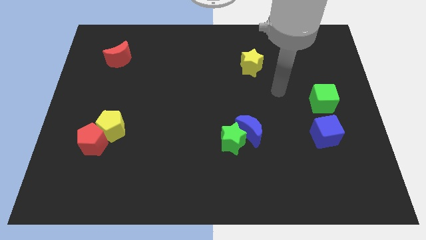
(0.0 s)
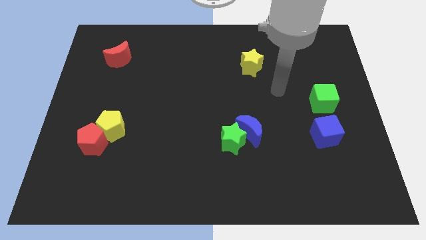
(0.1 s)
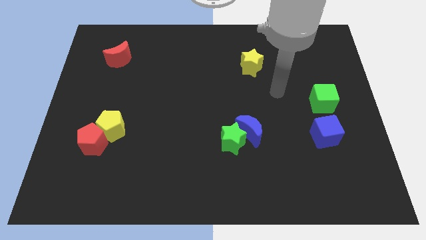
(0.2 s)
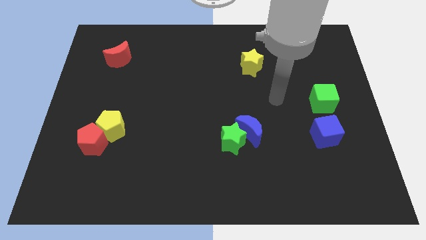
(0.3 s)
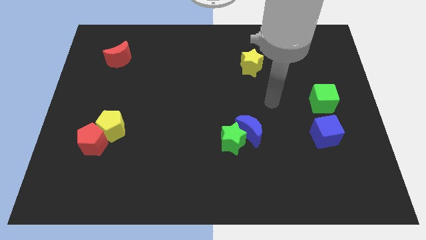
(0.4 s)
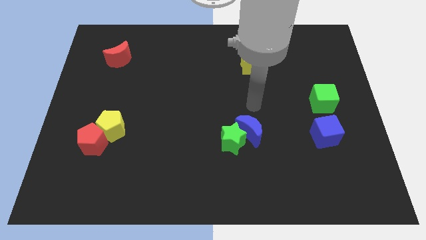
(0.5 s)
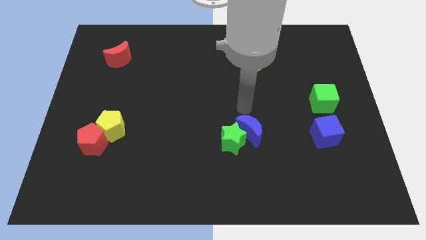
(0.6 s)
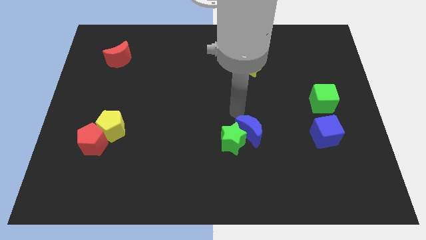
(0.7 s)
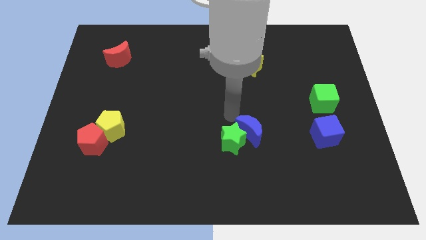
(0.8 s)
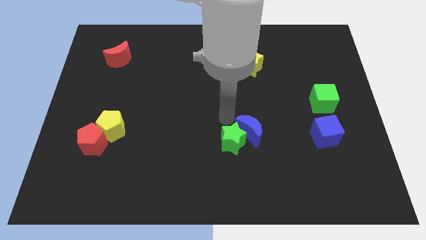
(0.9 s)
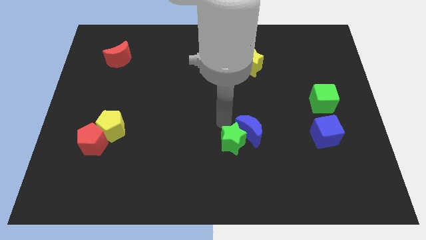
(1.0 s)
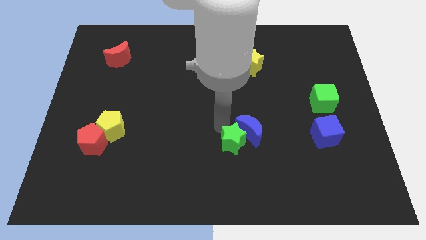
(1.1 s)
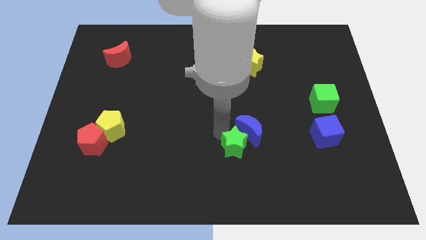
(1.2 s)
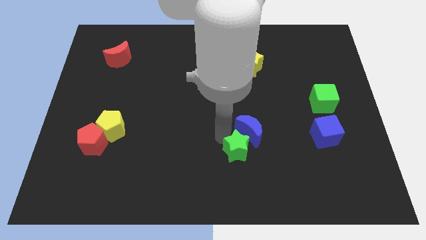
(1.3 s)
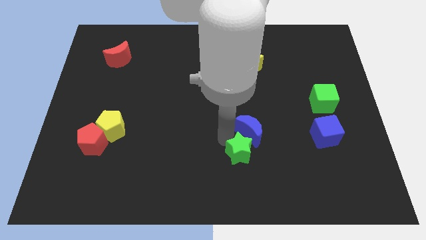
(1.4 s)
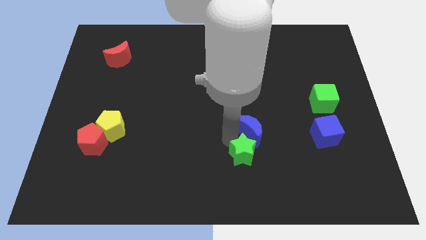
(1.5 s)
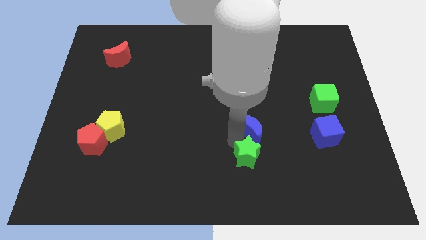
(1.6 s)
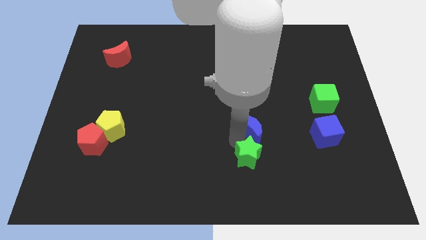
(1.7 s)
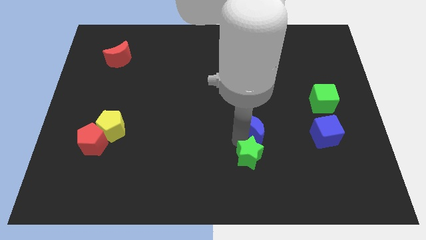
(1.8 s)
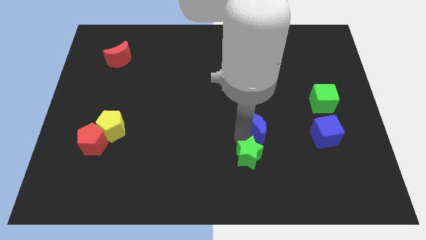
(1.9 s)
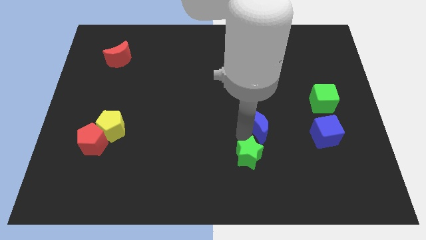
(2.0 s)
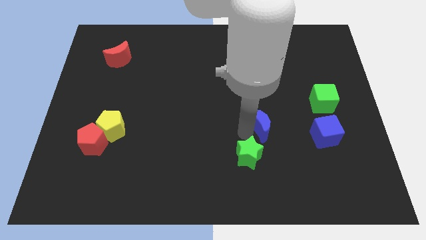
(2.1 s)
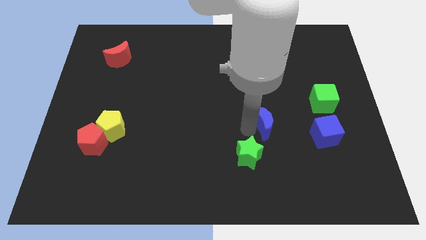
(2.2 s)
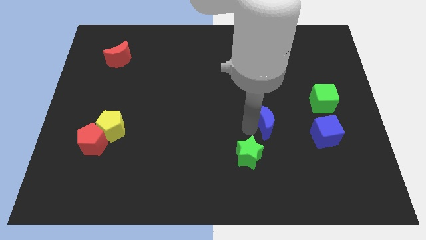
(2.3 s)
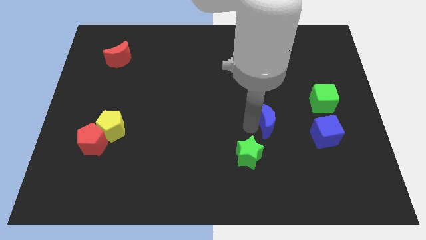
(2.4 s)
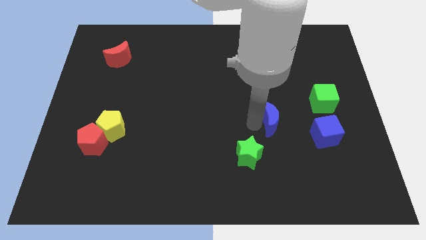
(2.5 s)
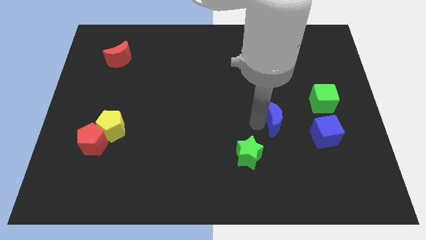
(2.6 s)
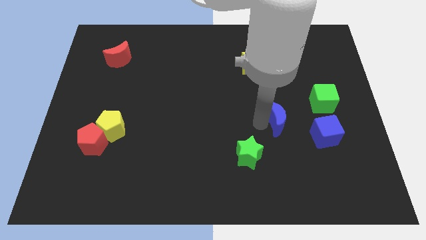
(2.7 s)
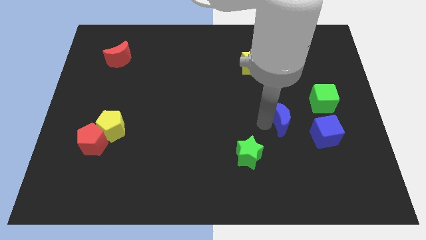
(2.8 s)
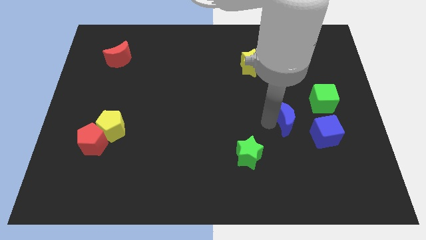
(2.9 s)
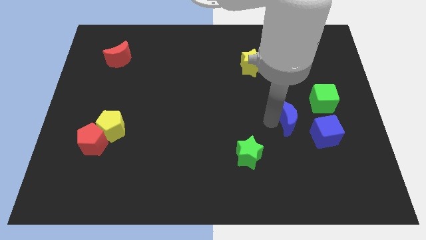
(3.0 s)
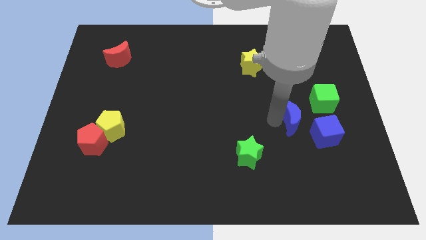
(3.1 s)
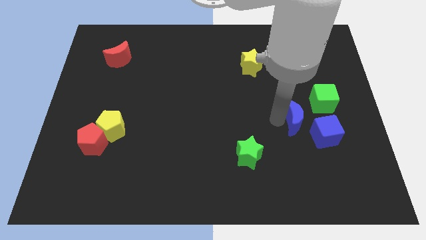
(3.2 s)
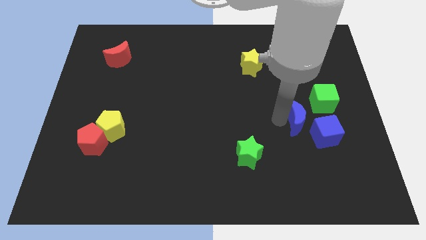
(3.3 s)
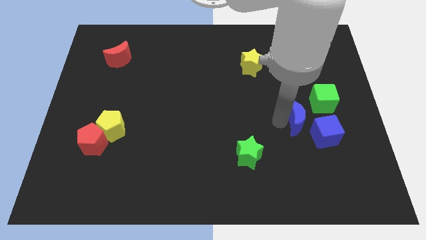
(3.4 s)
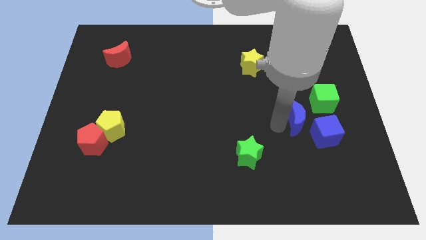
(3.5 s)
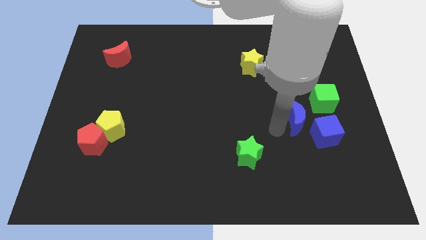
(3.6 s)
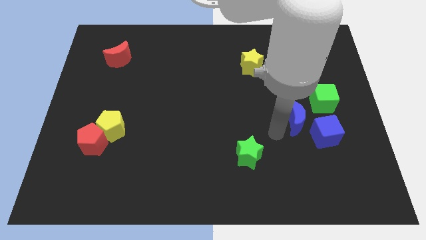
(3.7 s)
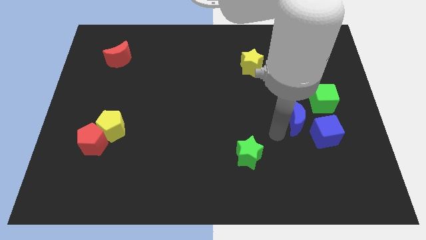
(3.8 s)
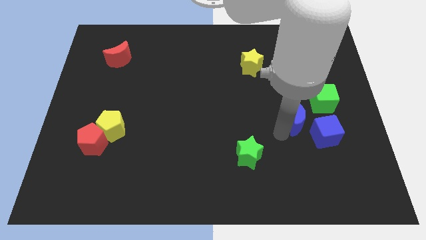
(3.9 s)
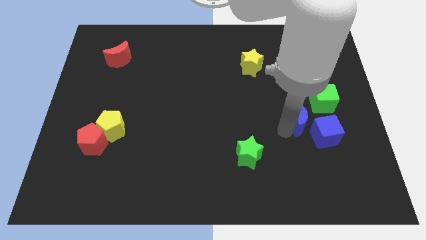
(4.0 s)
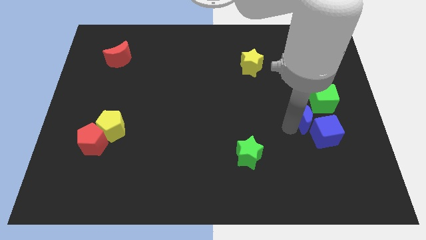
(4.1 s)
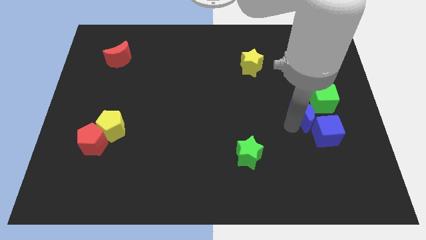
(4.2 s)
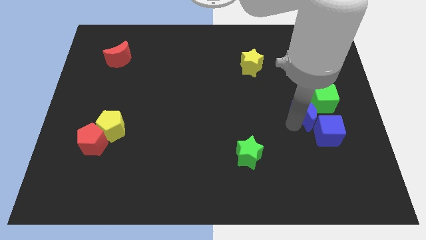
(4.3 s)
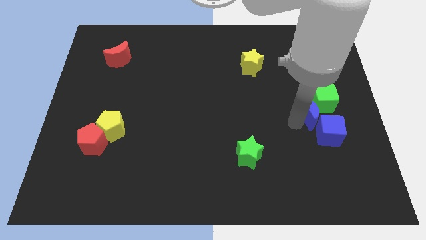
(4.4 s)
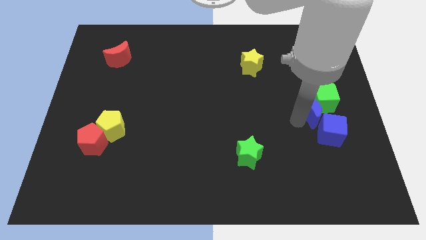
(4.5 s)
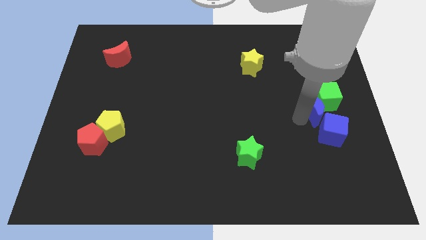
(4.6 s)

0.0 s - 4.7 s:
slide the blue moon towards the green cube

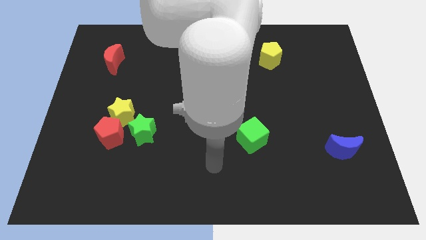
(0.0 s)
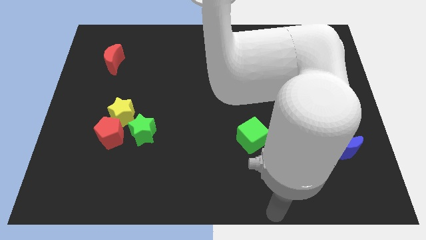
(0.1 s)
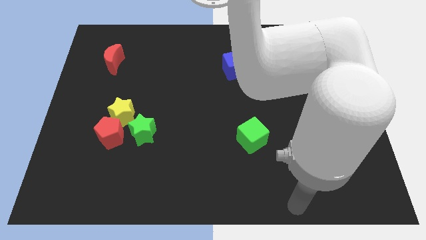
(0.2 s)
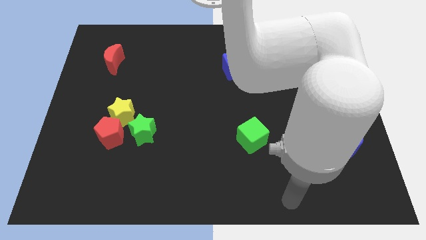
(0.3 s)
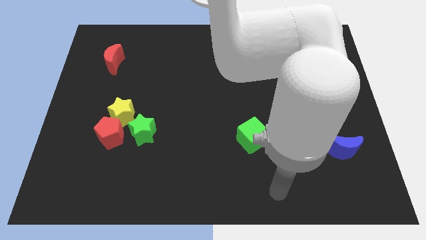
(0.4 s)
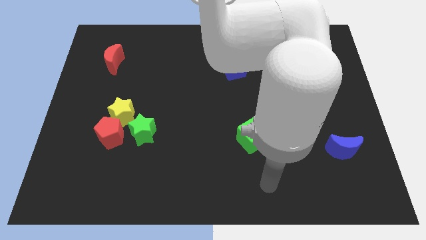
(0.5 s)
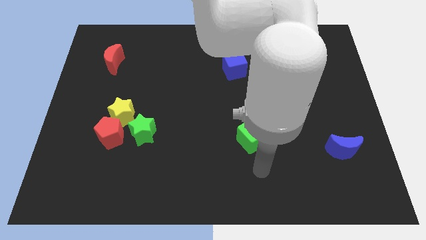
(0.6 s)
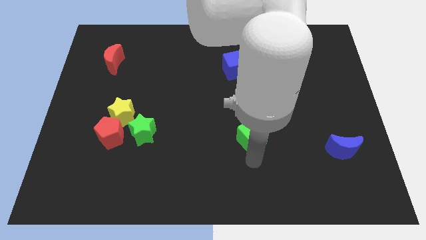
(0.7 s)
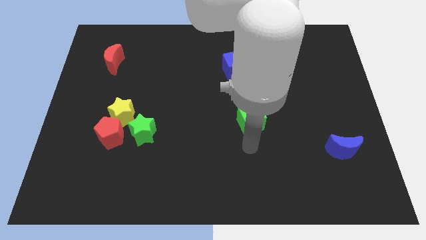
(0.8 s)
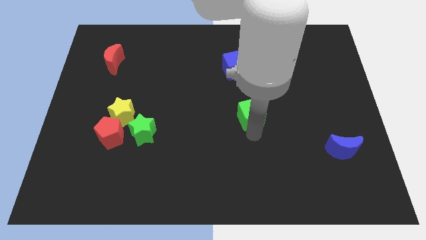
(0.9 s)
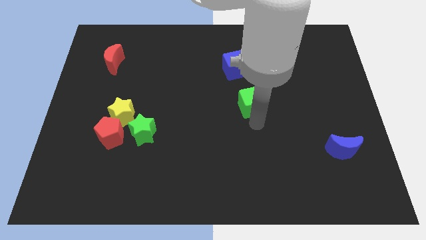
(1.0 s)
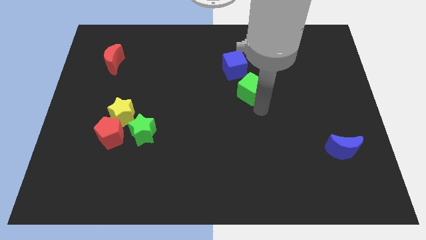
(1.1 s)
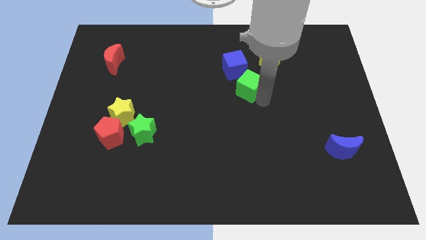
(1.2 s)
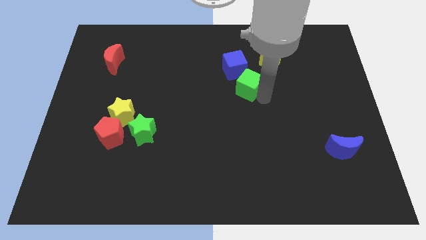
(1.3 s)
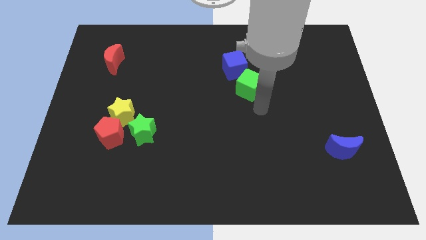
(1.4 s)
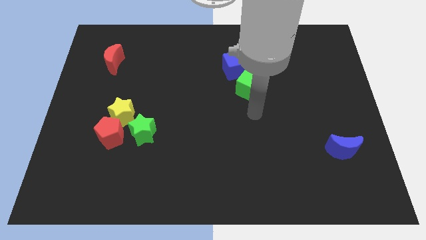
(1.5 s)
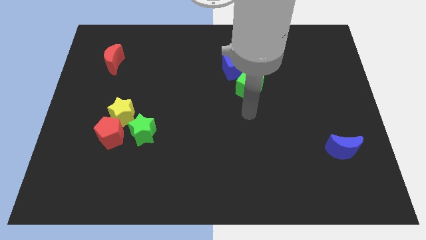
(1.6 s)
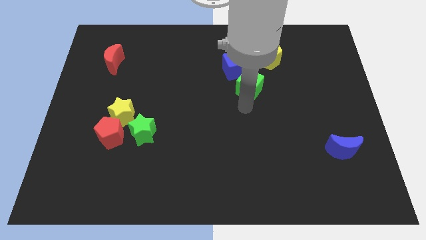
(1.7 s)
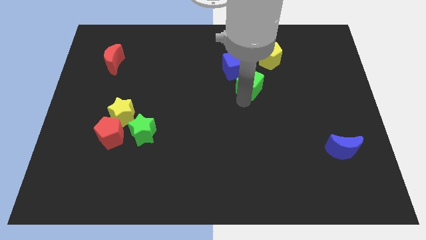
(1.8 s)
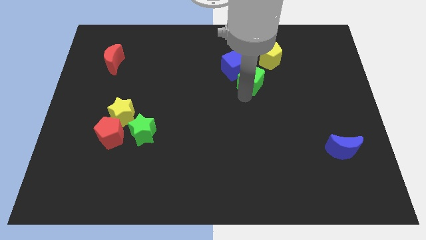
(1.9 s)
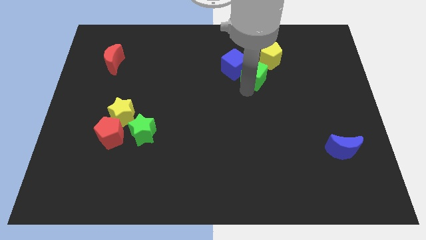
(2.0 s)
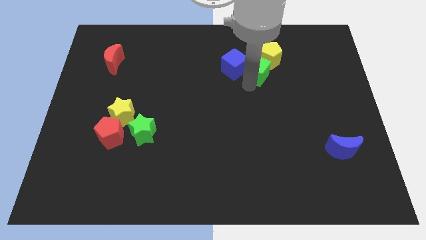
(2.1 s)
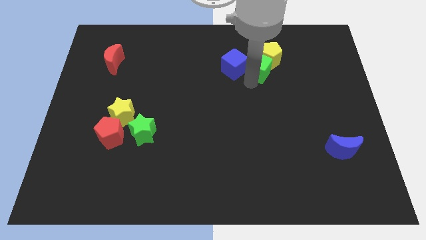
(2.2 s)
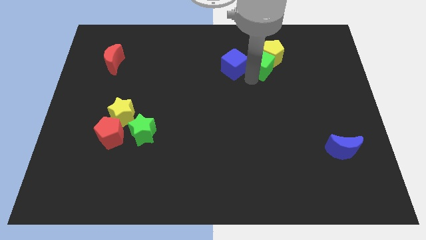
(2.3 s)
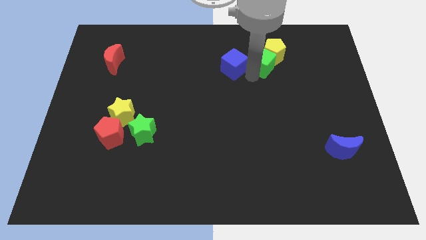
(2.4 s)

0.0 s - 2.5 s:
push the green cube next to the yellow pentagon

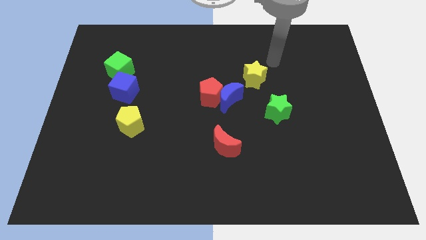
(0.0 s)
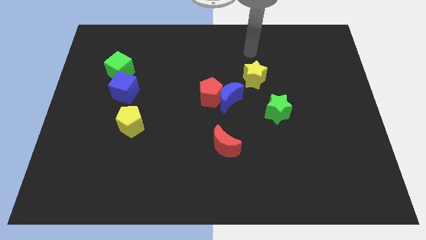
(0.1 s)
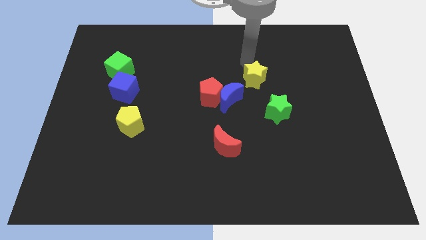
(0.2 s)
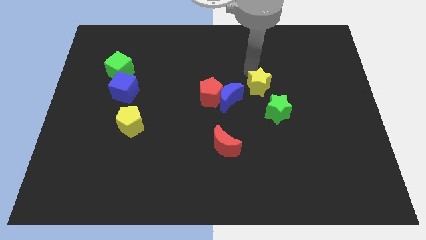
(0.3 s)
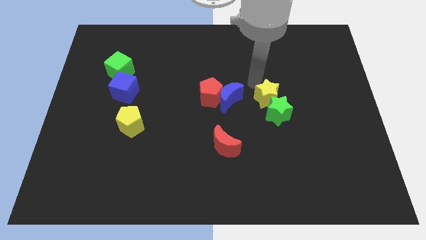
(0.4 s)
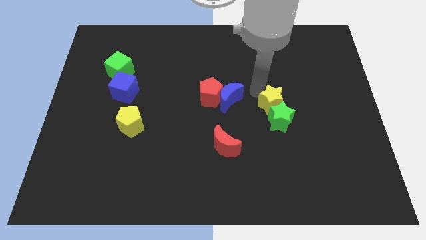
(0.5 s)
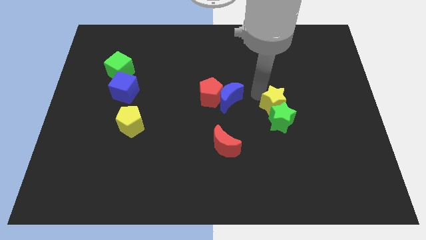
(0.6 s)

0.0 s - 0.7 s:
push the yellow star towards the green star

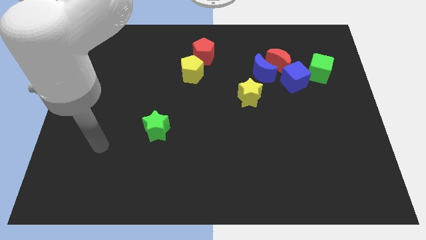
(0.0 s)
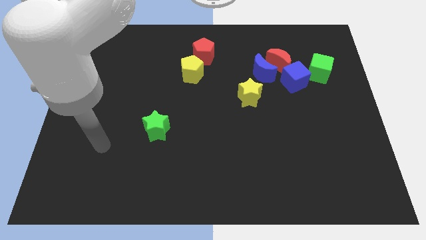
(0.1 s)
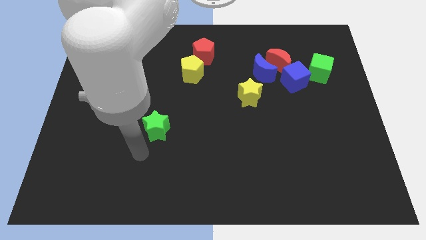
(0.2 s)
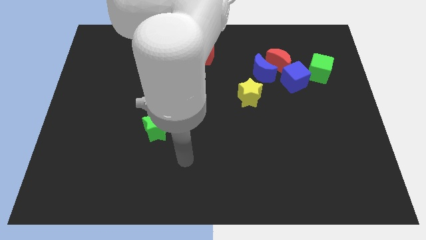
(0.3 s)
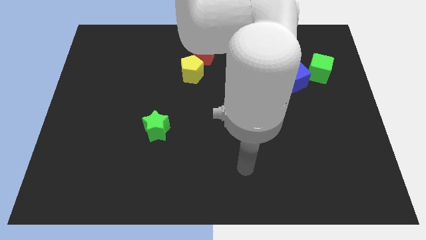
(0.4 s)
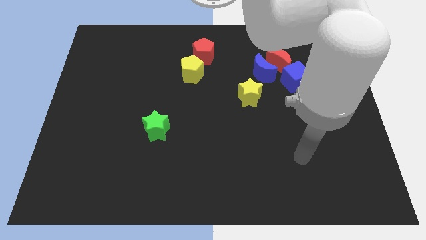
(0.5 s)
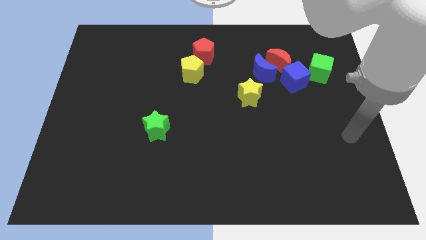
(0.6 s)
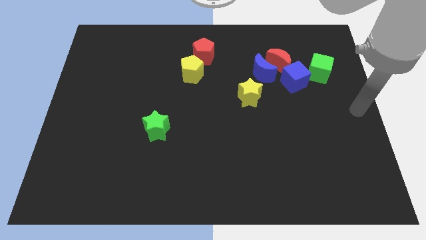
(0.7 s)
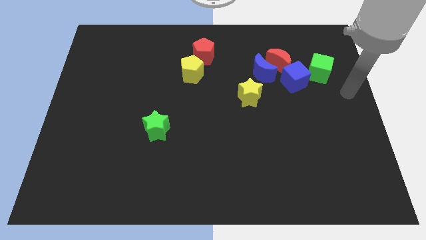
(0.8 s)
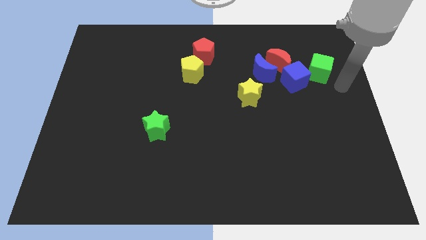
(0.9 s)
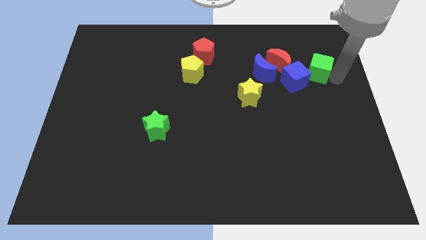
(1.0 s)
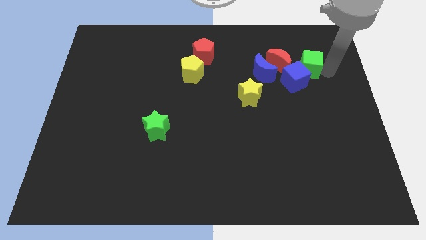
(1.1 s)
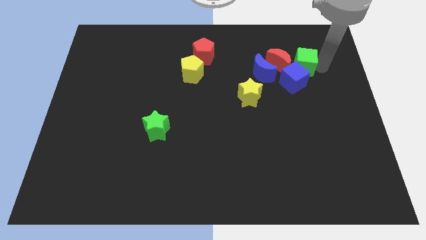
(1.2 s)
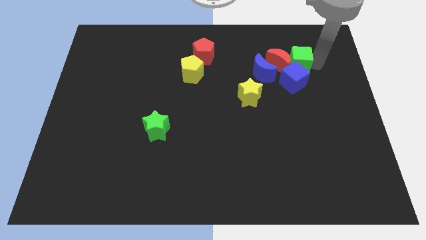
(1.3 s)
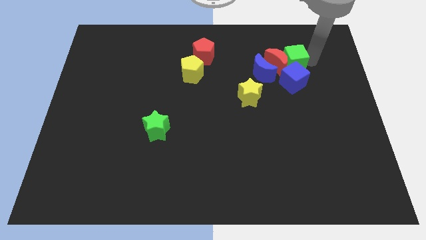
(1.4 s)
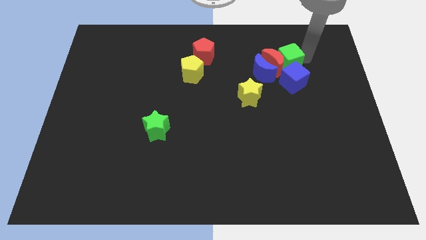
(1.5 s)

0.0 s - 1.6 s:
slide the green cube next to the red moon
